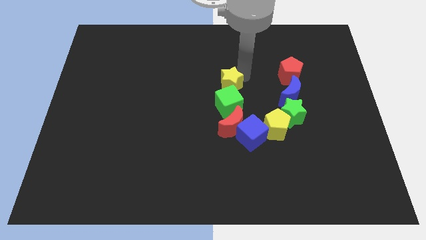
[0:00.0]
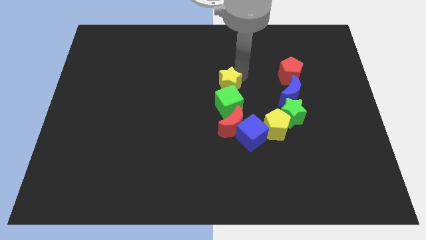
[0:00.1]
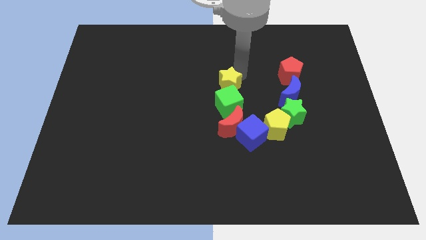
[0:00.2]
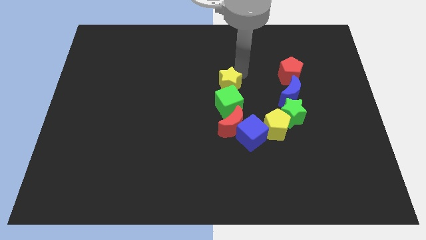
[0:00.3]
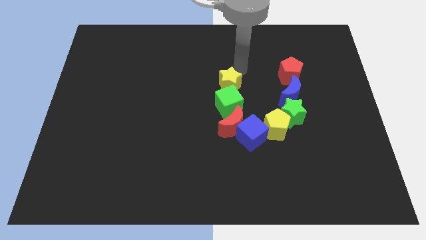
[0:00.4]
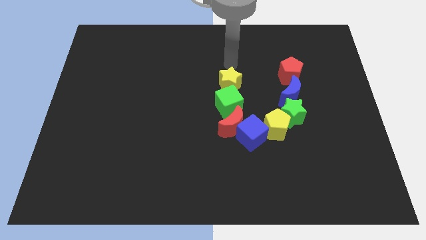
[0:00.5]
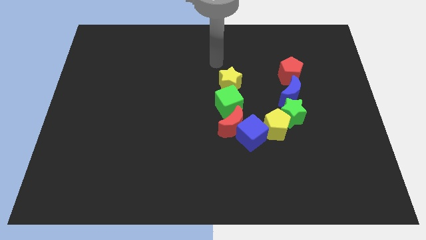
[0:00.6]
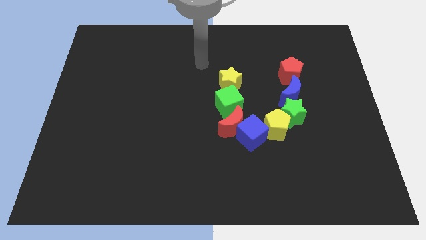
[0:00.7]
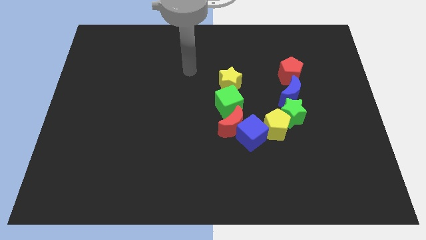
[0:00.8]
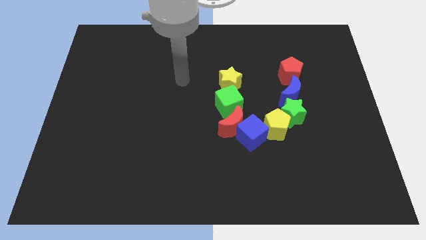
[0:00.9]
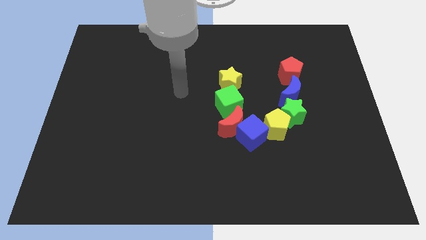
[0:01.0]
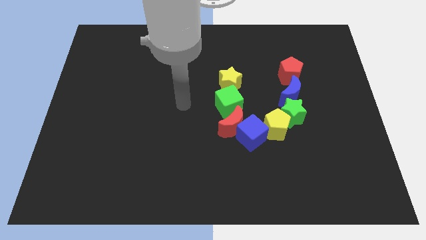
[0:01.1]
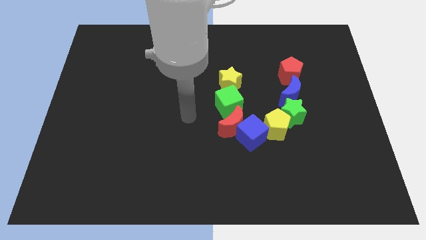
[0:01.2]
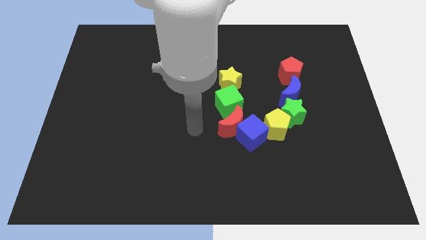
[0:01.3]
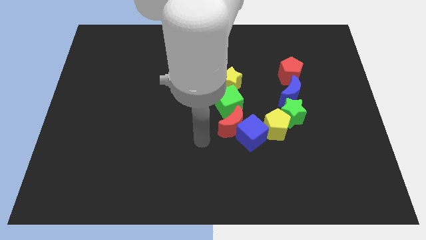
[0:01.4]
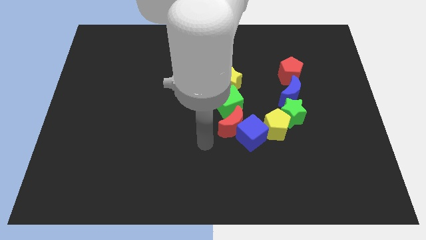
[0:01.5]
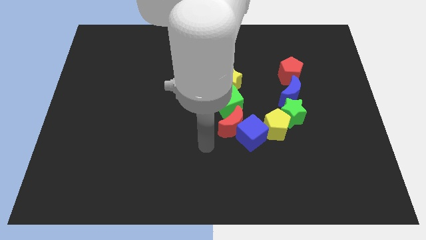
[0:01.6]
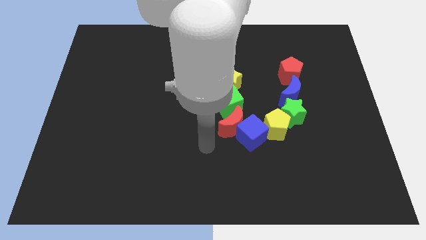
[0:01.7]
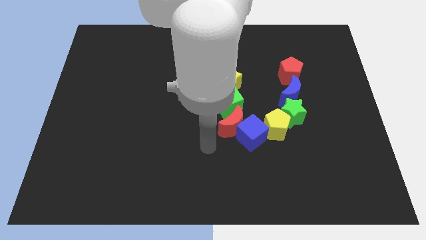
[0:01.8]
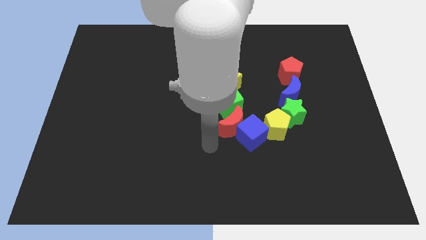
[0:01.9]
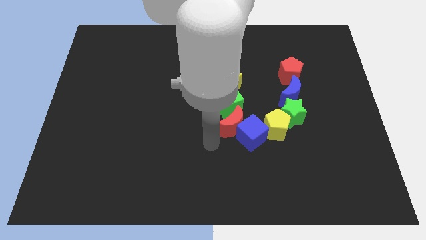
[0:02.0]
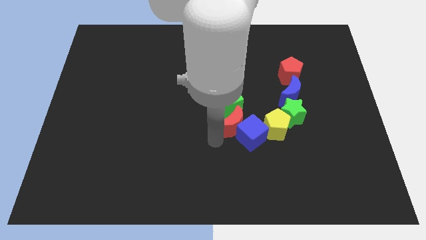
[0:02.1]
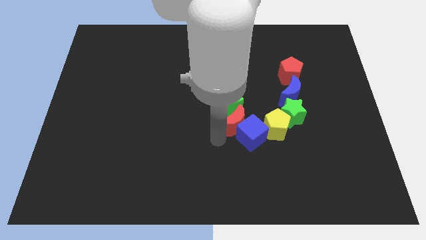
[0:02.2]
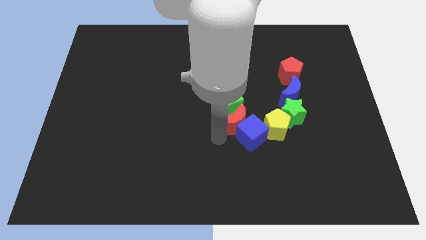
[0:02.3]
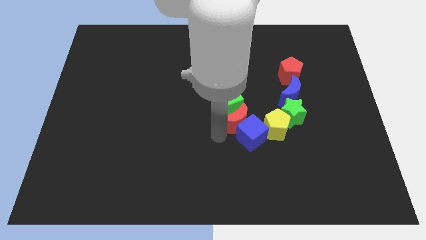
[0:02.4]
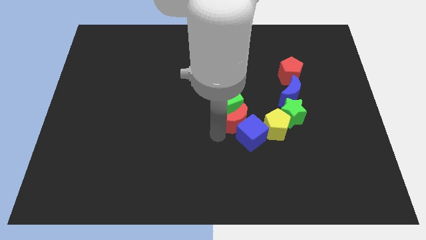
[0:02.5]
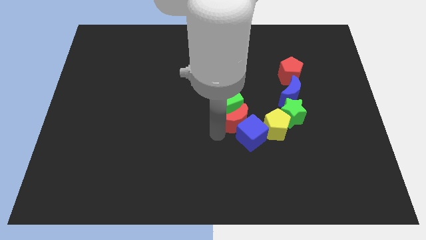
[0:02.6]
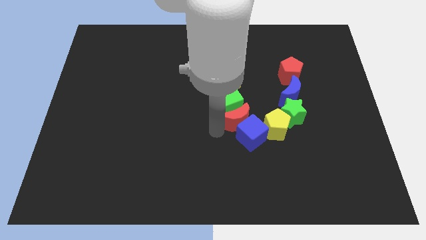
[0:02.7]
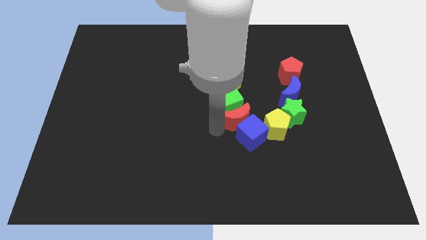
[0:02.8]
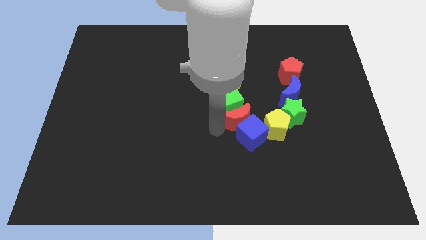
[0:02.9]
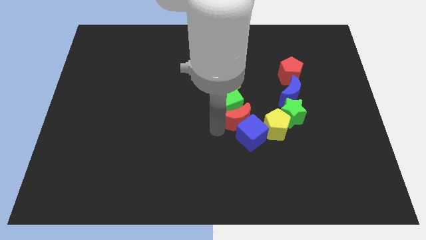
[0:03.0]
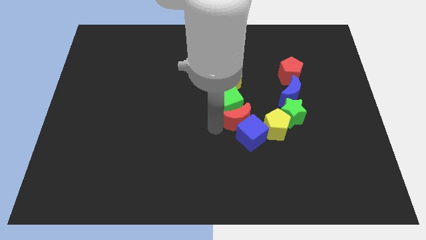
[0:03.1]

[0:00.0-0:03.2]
push red half moon between green cube and blue cube

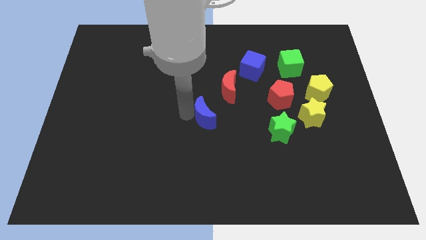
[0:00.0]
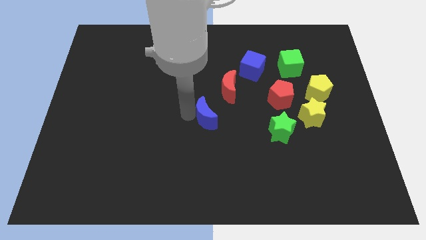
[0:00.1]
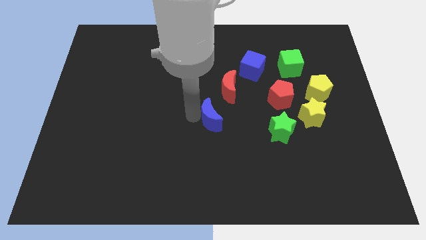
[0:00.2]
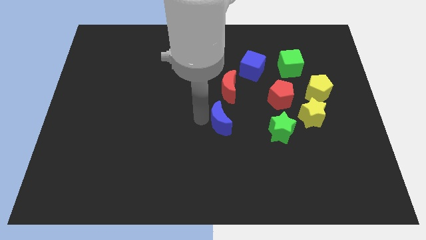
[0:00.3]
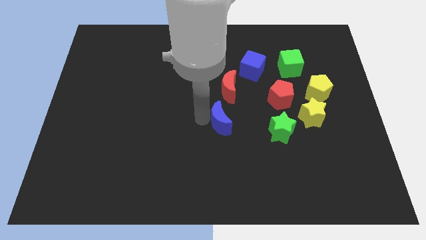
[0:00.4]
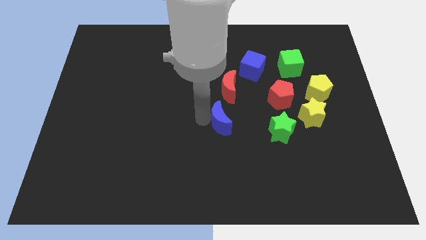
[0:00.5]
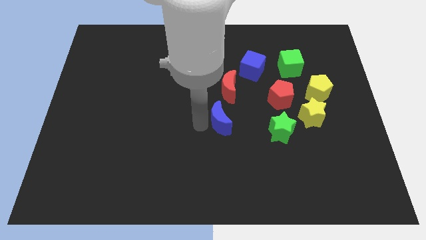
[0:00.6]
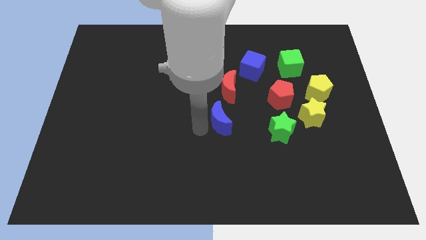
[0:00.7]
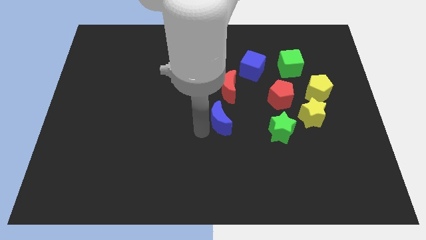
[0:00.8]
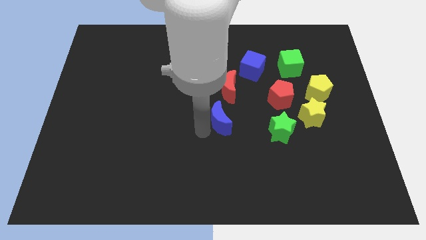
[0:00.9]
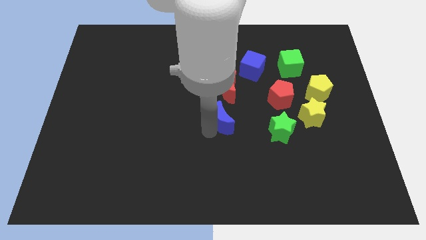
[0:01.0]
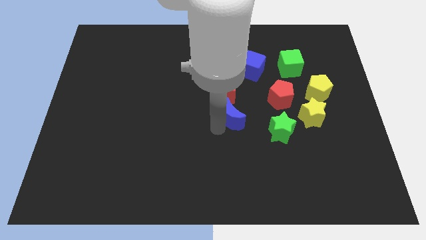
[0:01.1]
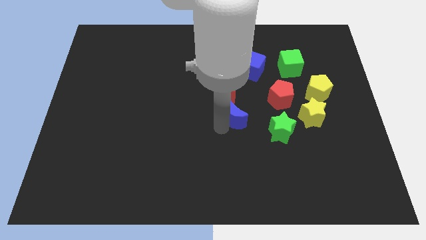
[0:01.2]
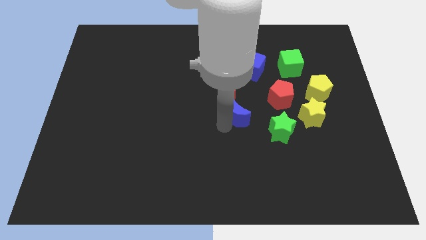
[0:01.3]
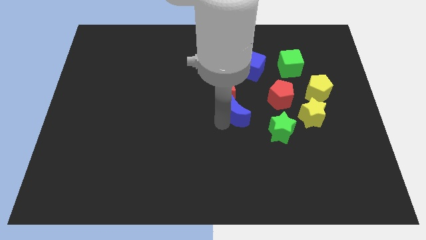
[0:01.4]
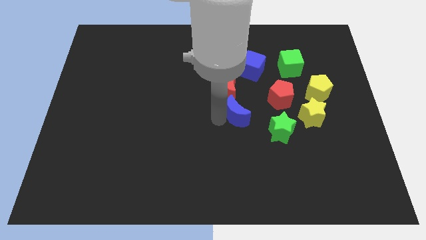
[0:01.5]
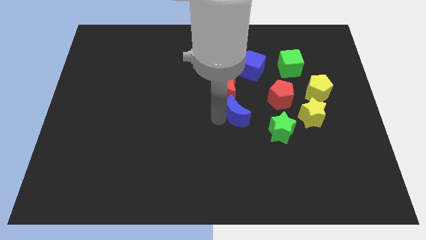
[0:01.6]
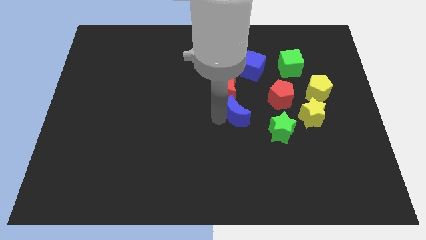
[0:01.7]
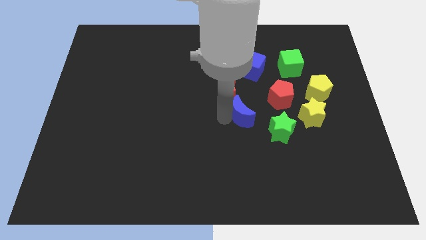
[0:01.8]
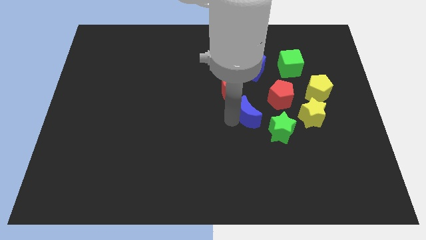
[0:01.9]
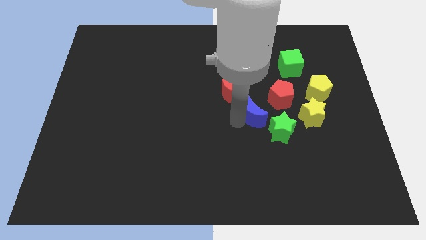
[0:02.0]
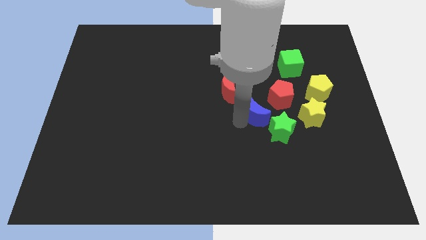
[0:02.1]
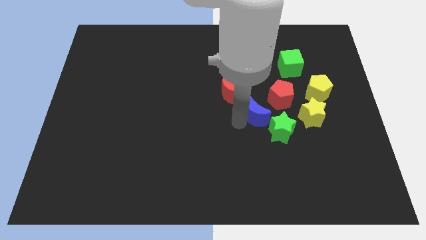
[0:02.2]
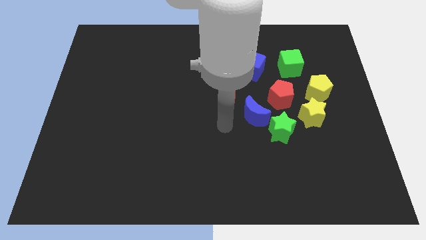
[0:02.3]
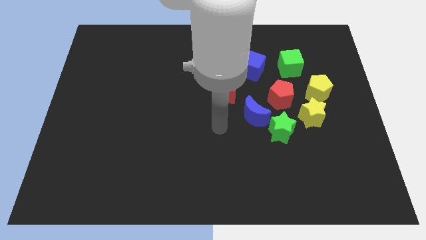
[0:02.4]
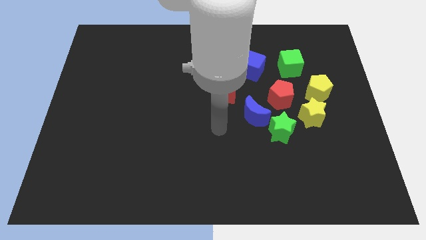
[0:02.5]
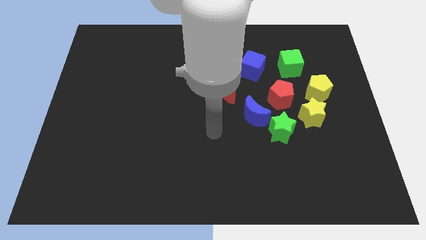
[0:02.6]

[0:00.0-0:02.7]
place blue moon close to green star

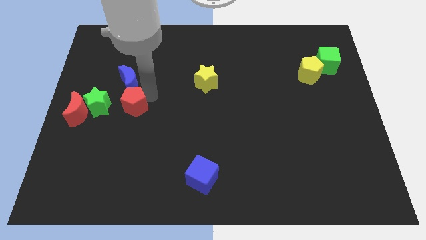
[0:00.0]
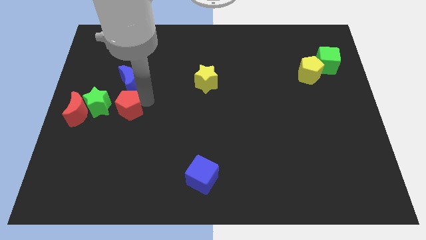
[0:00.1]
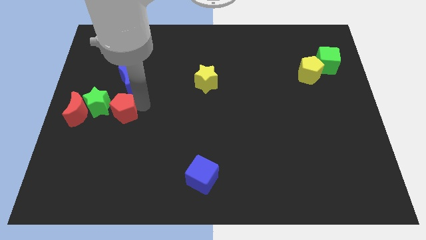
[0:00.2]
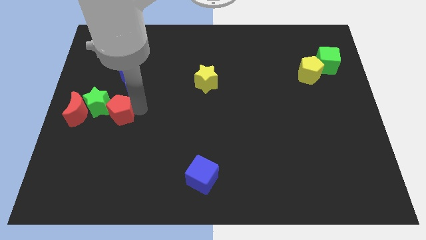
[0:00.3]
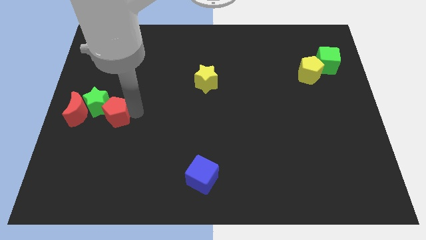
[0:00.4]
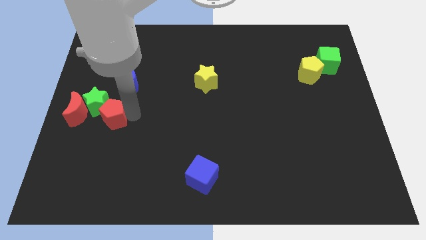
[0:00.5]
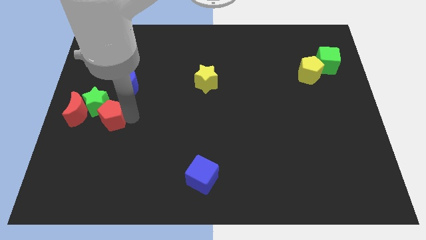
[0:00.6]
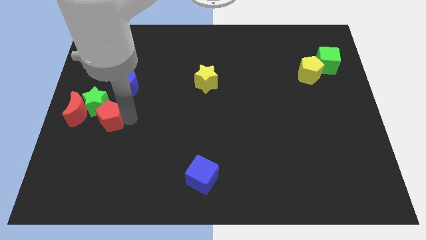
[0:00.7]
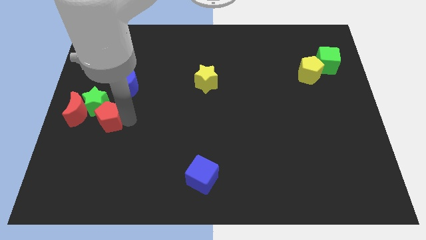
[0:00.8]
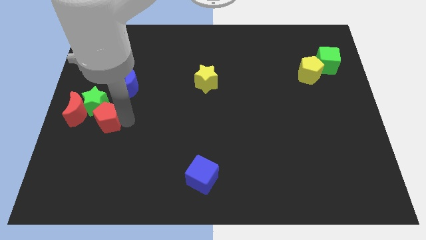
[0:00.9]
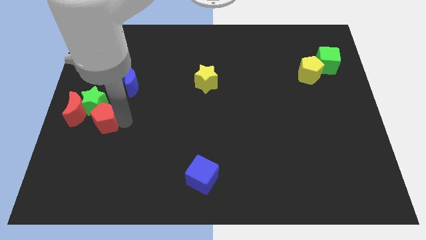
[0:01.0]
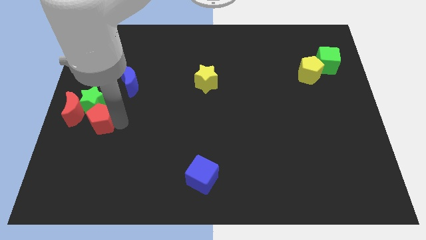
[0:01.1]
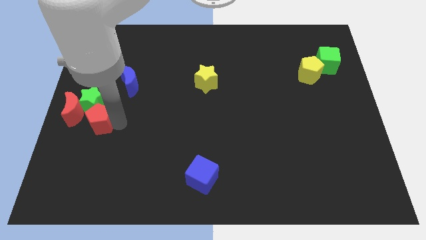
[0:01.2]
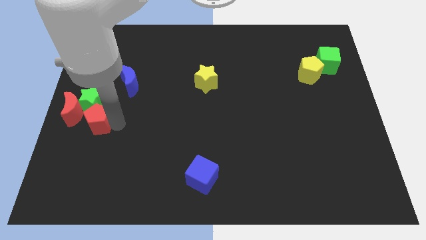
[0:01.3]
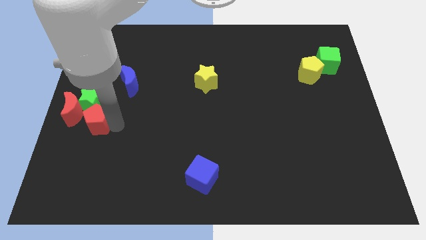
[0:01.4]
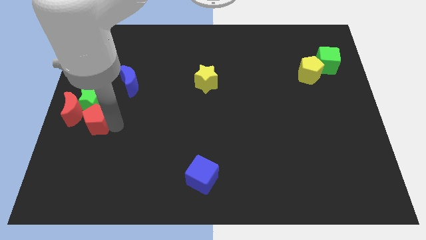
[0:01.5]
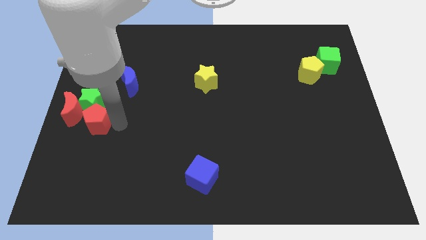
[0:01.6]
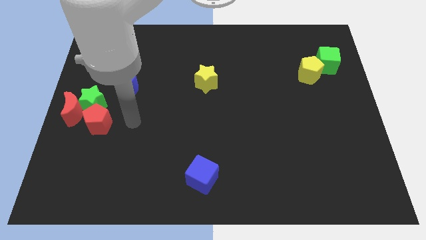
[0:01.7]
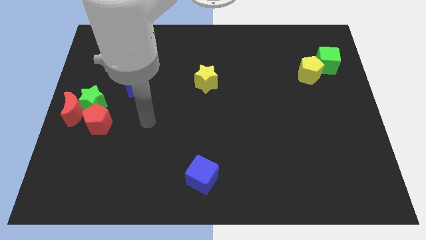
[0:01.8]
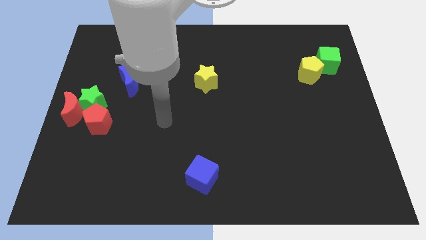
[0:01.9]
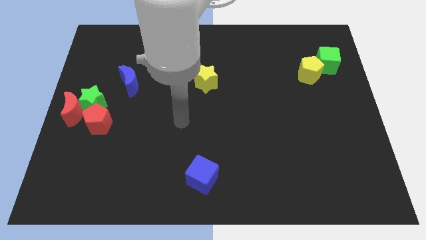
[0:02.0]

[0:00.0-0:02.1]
push red pentagon to the bottom right of red moon

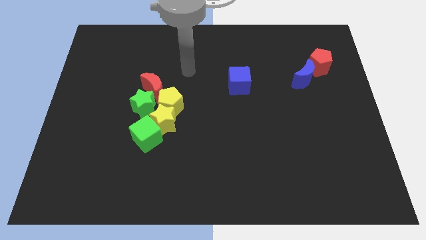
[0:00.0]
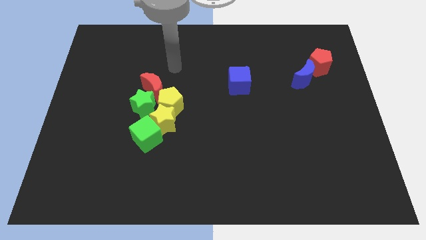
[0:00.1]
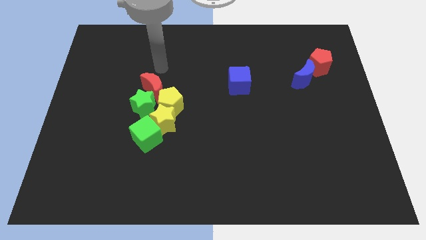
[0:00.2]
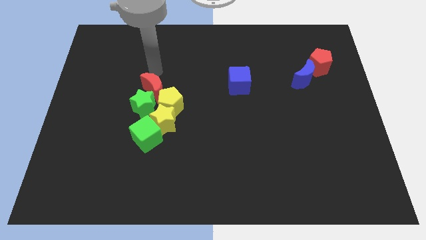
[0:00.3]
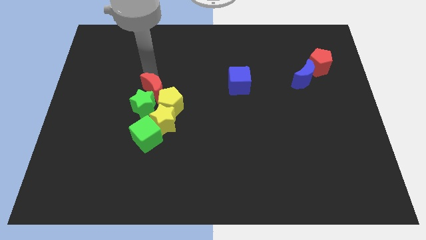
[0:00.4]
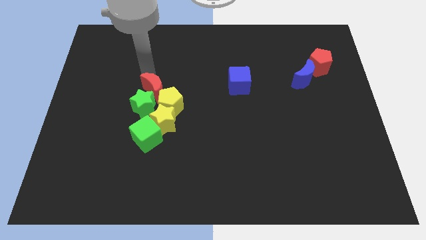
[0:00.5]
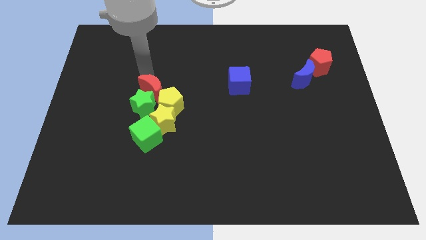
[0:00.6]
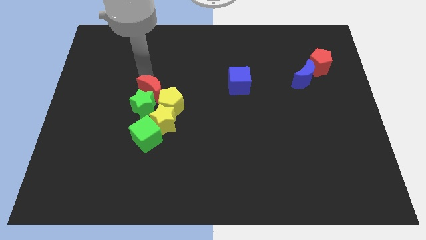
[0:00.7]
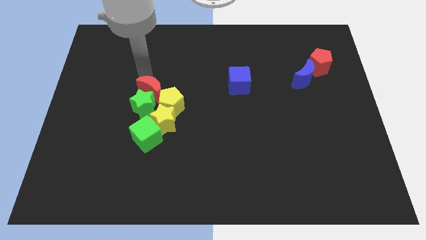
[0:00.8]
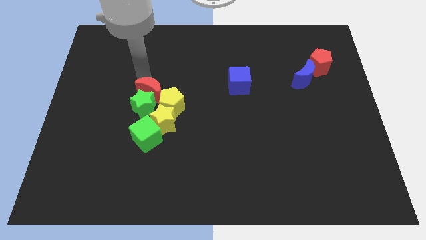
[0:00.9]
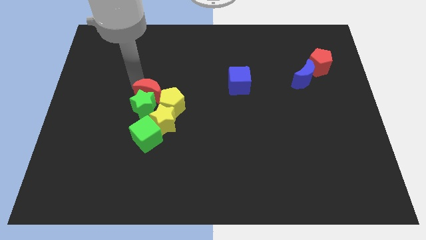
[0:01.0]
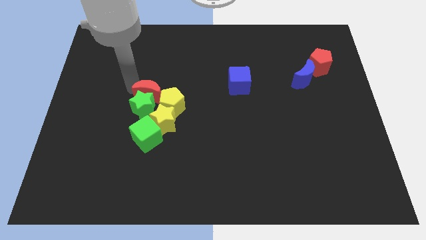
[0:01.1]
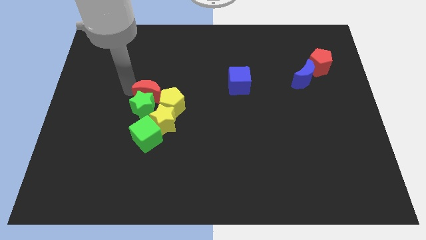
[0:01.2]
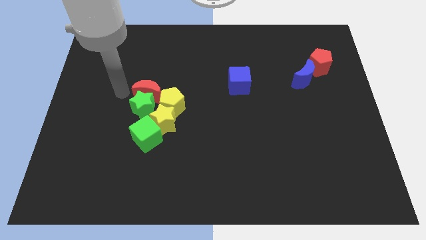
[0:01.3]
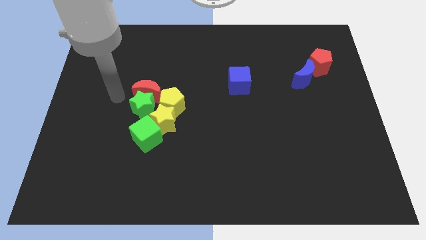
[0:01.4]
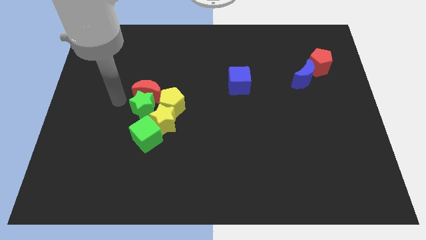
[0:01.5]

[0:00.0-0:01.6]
push the red crescent into the green star
